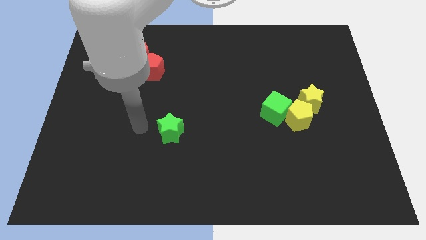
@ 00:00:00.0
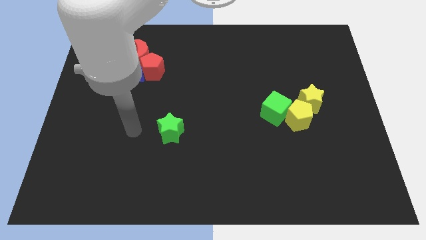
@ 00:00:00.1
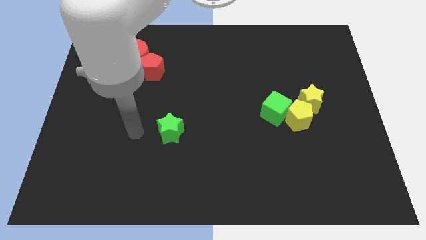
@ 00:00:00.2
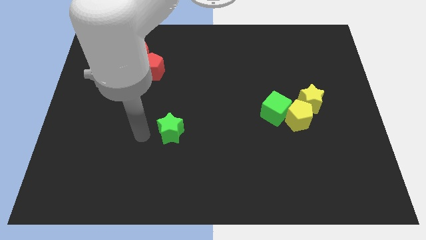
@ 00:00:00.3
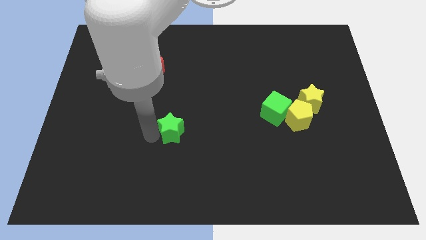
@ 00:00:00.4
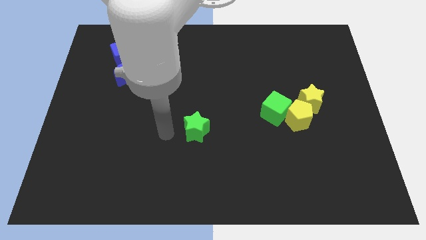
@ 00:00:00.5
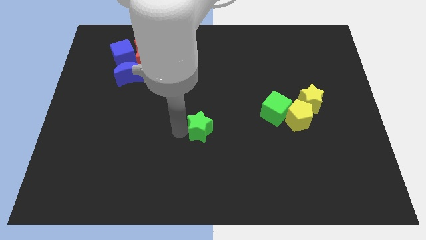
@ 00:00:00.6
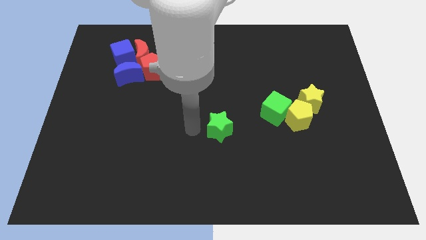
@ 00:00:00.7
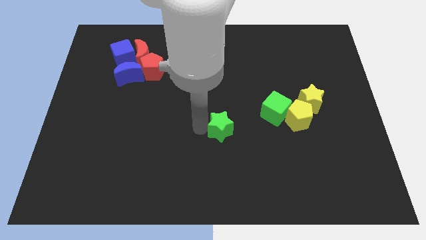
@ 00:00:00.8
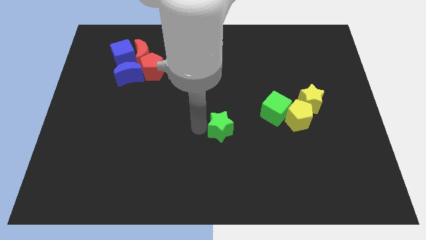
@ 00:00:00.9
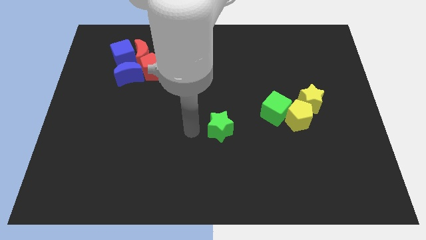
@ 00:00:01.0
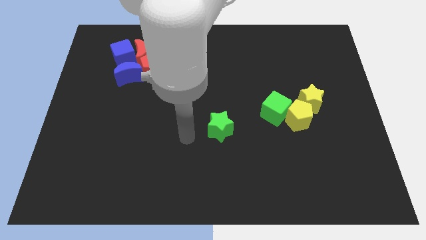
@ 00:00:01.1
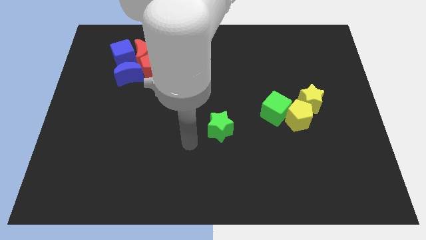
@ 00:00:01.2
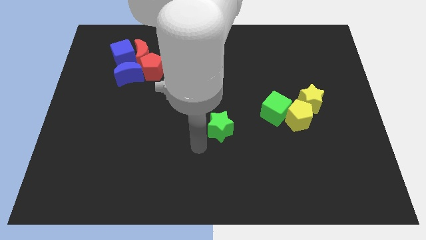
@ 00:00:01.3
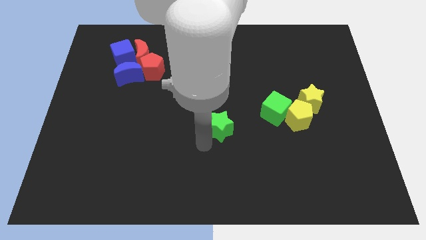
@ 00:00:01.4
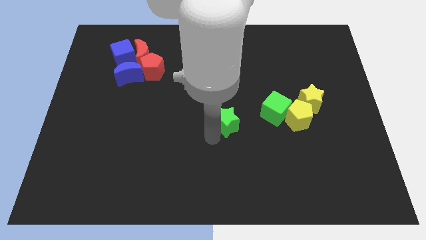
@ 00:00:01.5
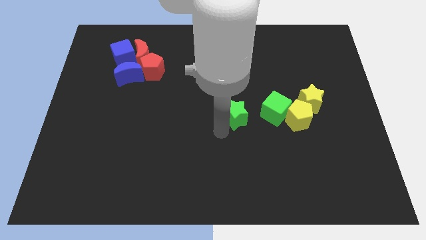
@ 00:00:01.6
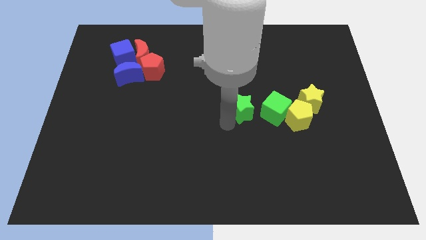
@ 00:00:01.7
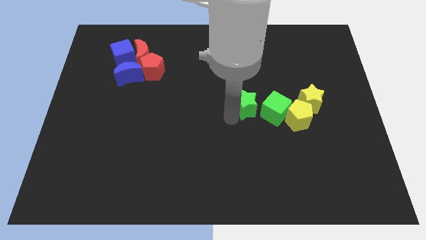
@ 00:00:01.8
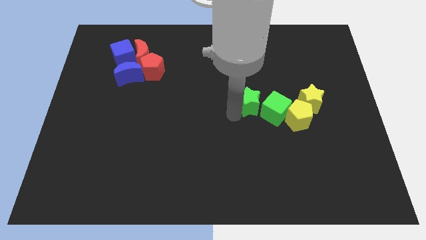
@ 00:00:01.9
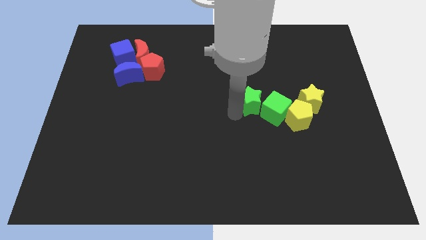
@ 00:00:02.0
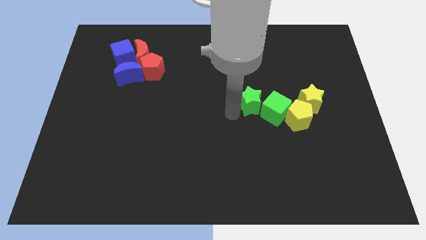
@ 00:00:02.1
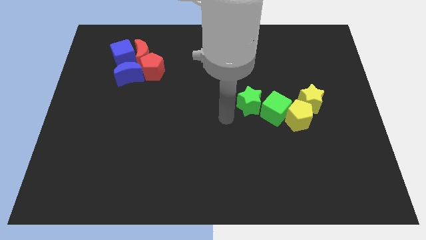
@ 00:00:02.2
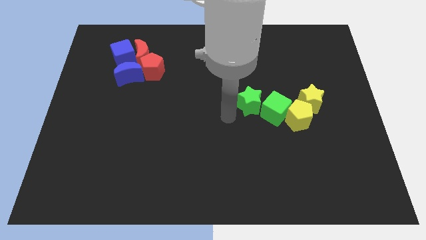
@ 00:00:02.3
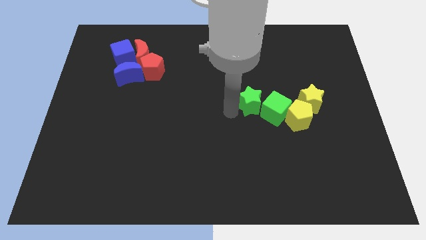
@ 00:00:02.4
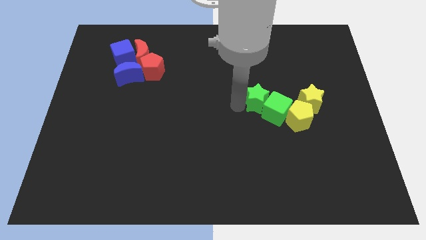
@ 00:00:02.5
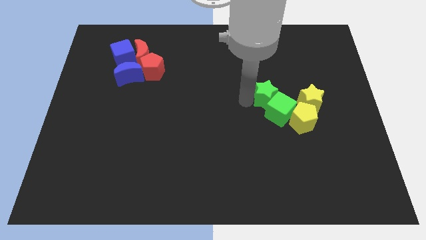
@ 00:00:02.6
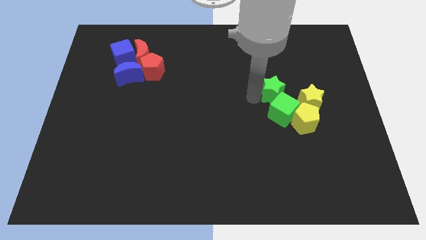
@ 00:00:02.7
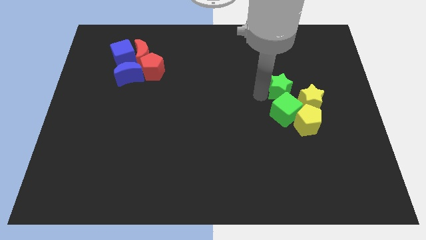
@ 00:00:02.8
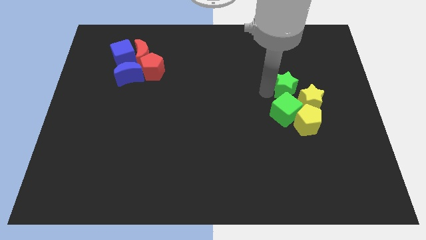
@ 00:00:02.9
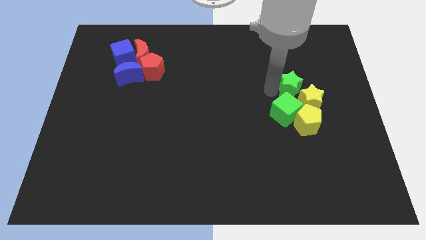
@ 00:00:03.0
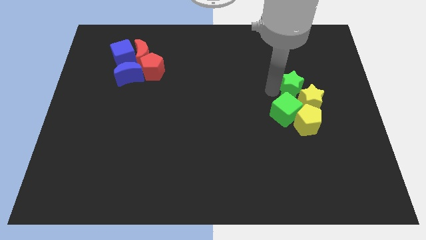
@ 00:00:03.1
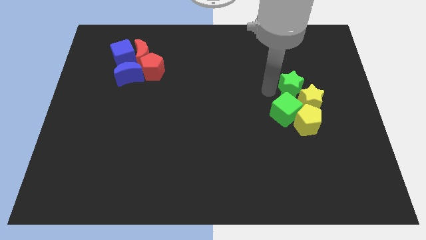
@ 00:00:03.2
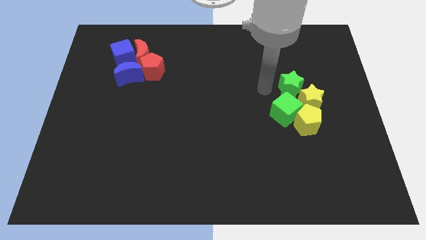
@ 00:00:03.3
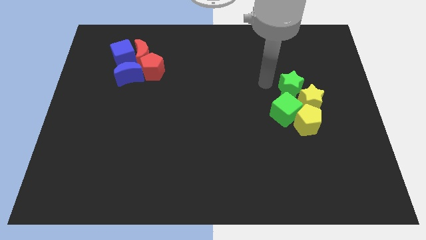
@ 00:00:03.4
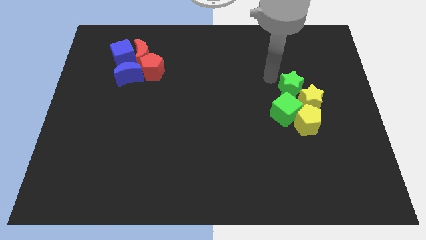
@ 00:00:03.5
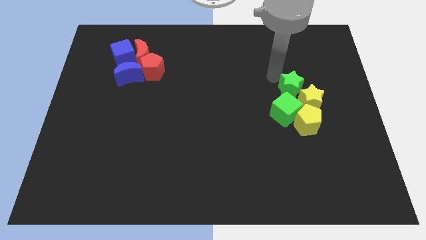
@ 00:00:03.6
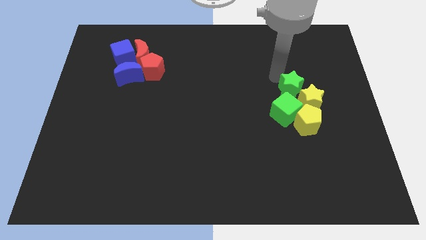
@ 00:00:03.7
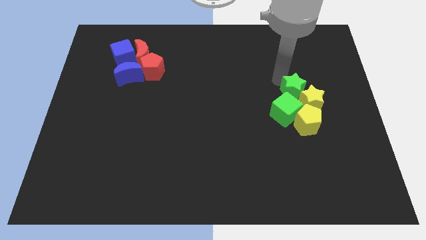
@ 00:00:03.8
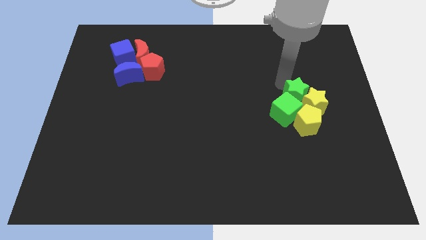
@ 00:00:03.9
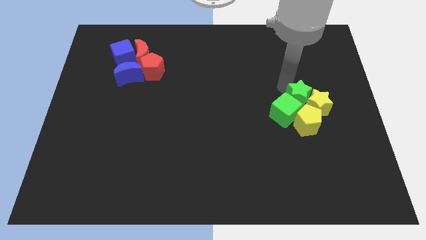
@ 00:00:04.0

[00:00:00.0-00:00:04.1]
push the green star in the group of yellow and green blocks

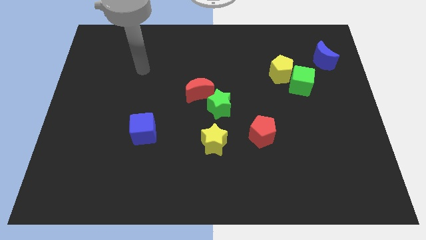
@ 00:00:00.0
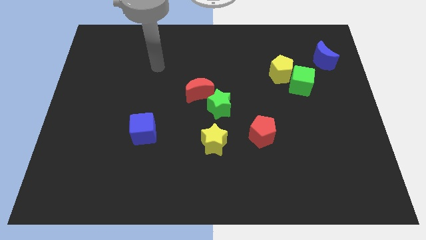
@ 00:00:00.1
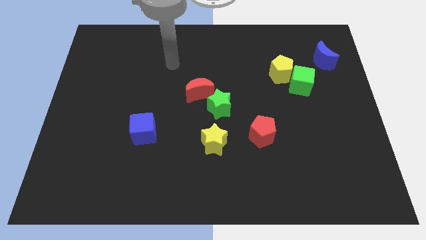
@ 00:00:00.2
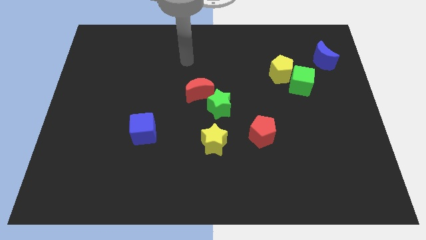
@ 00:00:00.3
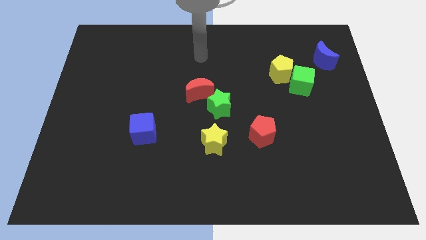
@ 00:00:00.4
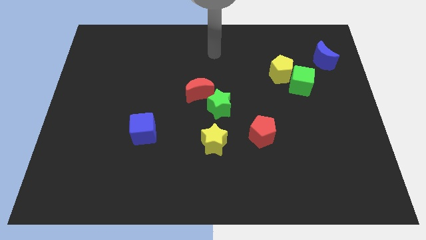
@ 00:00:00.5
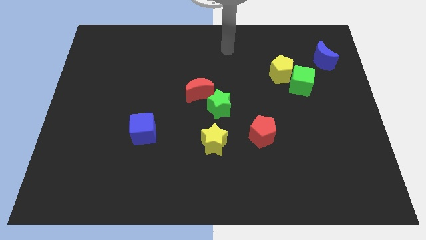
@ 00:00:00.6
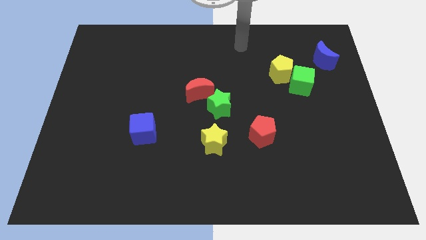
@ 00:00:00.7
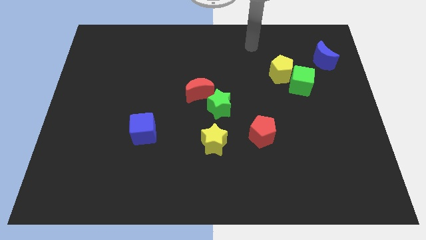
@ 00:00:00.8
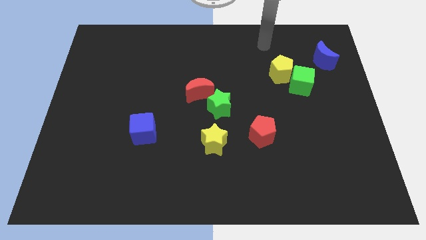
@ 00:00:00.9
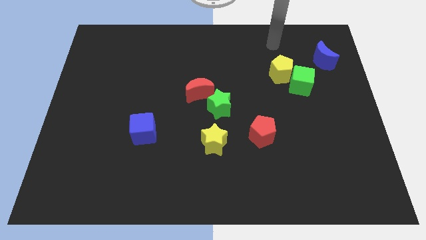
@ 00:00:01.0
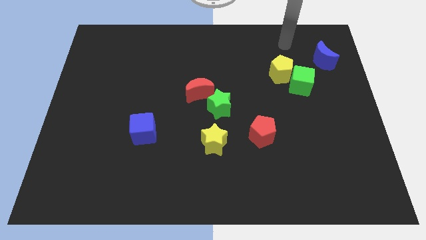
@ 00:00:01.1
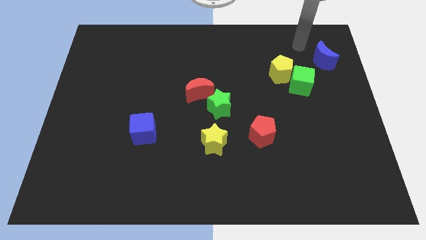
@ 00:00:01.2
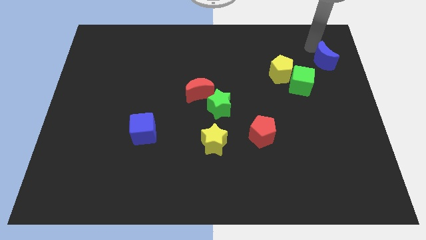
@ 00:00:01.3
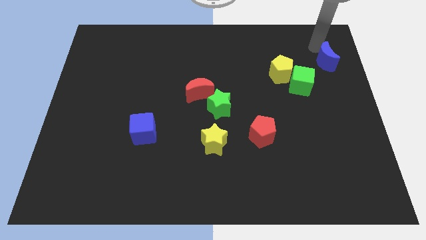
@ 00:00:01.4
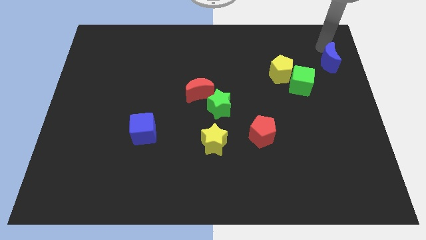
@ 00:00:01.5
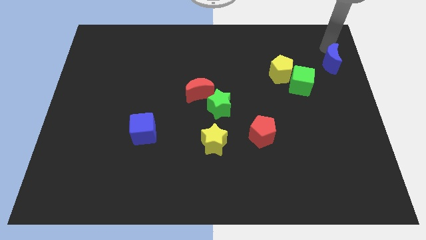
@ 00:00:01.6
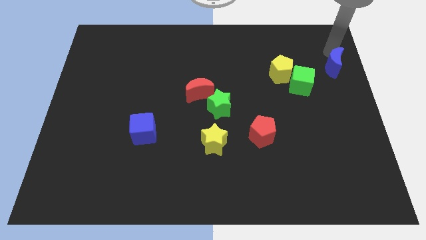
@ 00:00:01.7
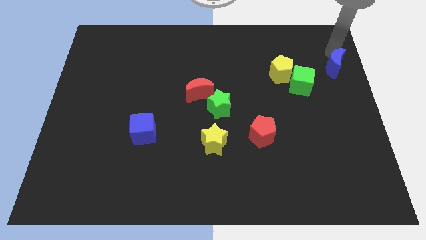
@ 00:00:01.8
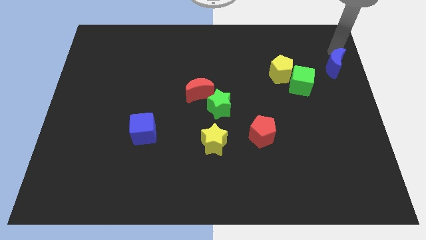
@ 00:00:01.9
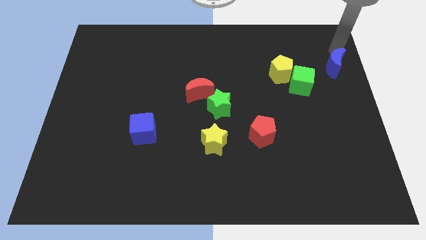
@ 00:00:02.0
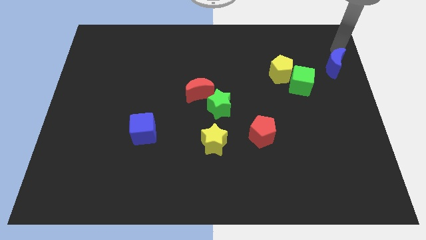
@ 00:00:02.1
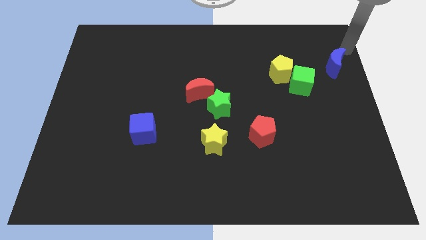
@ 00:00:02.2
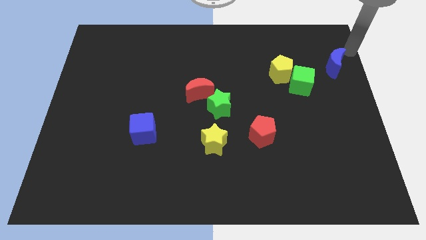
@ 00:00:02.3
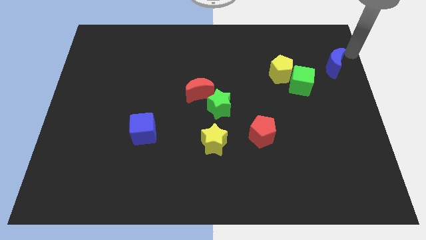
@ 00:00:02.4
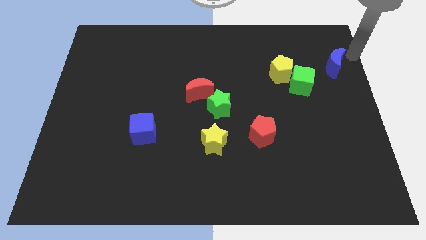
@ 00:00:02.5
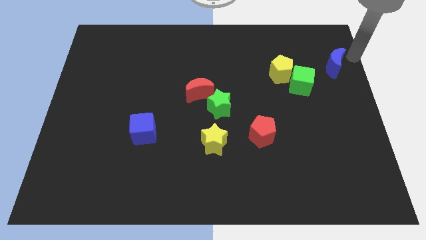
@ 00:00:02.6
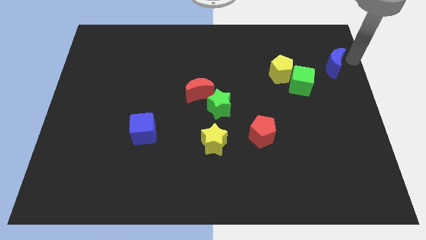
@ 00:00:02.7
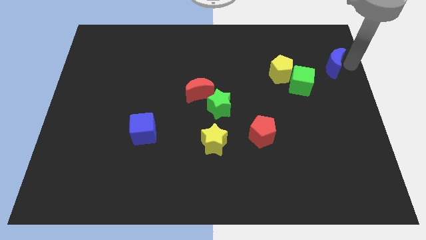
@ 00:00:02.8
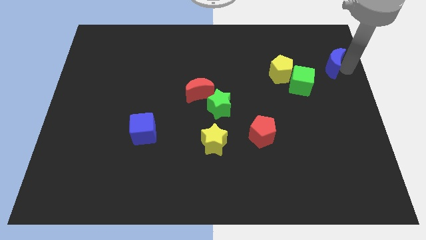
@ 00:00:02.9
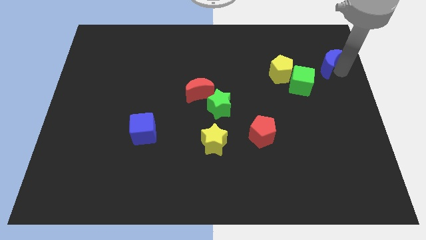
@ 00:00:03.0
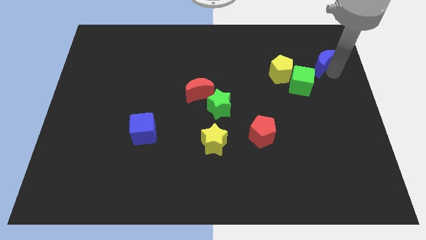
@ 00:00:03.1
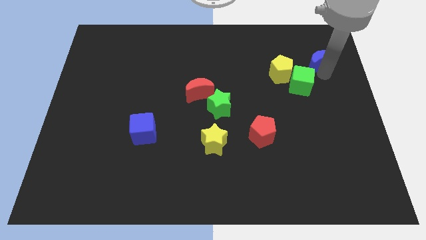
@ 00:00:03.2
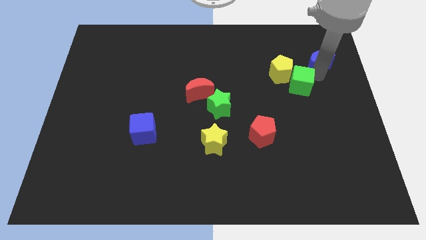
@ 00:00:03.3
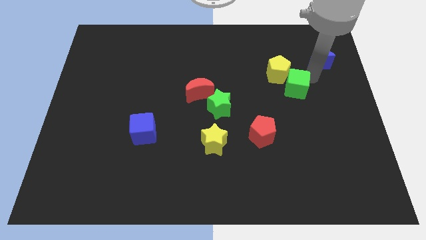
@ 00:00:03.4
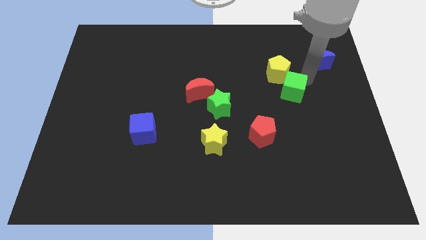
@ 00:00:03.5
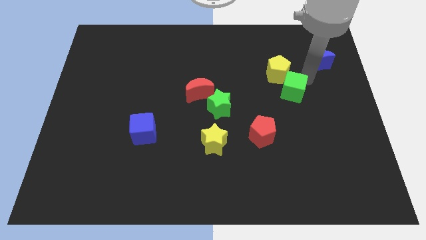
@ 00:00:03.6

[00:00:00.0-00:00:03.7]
touch the green cube

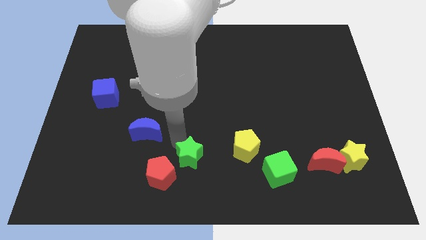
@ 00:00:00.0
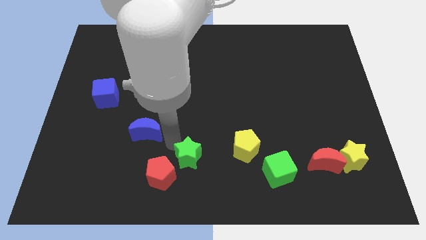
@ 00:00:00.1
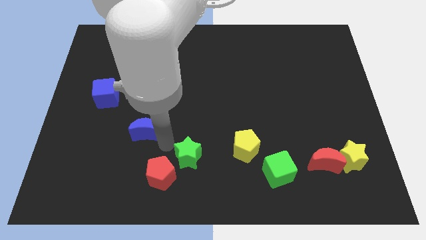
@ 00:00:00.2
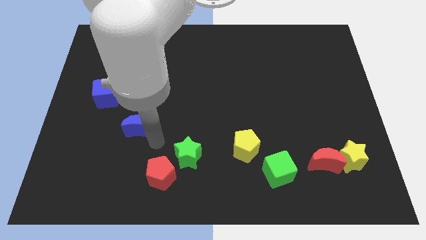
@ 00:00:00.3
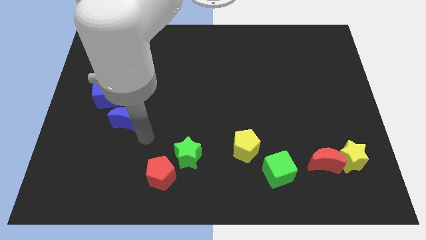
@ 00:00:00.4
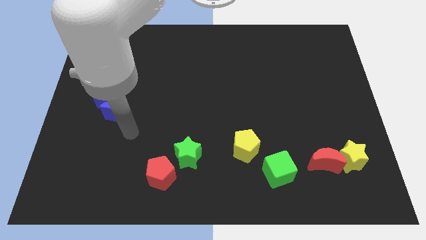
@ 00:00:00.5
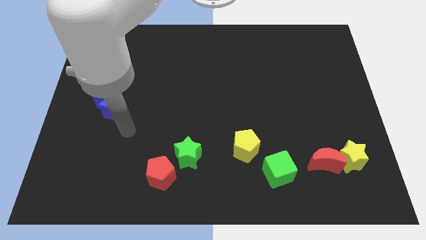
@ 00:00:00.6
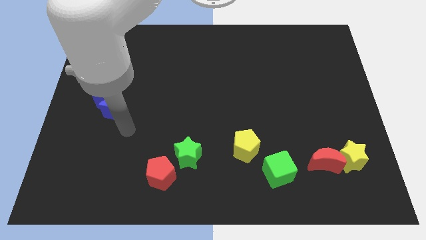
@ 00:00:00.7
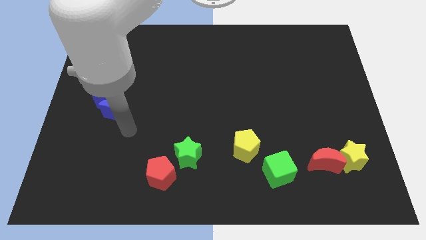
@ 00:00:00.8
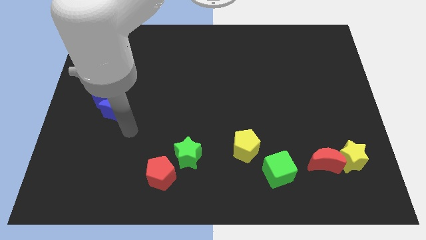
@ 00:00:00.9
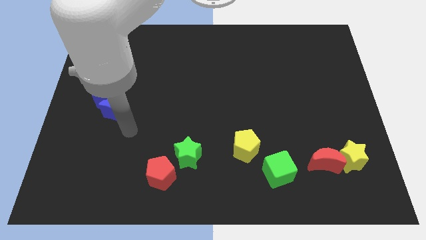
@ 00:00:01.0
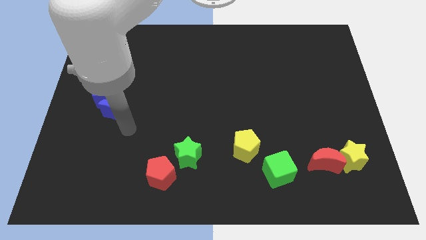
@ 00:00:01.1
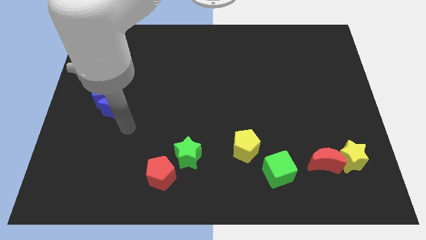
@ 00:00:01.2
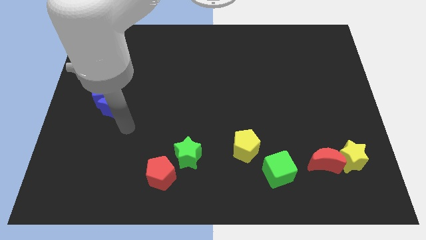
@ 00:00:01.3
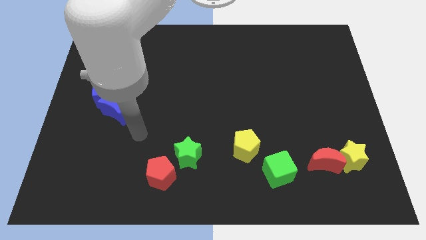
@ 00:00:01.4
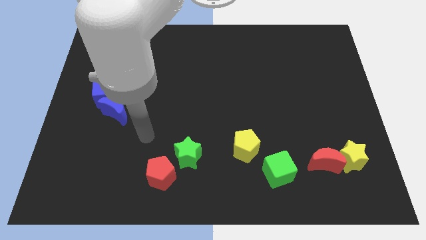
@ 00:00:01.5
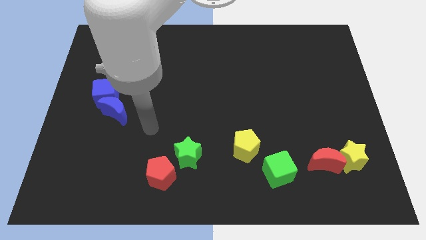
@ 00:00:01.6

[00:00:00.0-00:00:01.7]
move the blue moon below the blue cube
